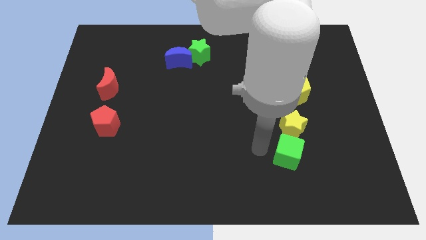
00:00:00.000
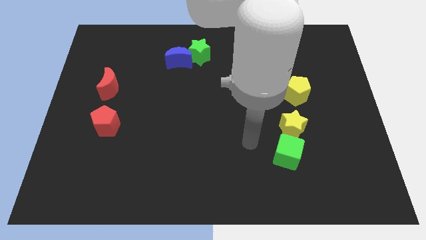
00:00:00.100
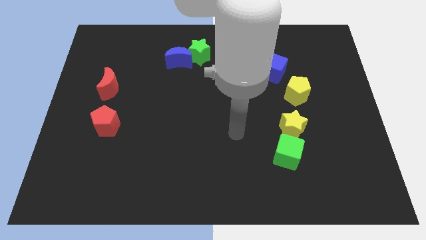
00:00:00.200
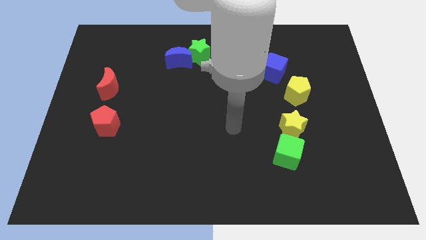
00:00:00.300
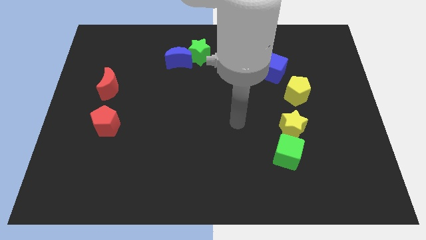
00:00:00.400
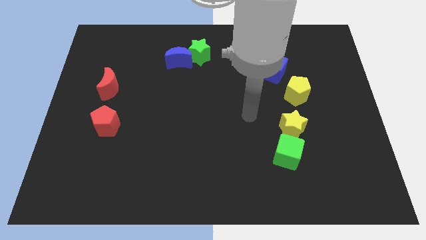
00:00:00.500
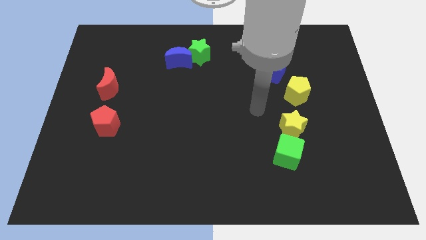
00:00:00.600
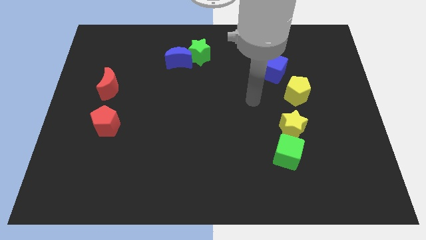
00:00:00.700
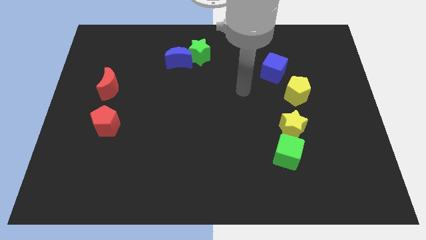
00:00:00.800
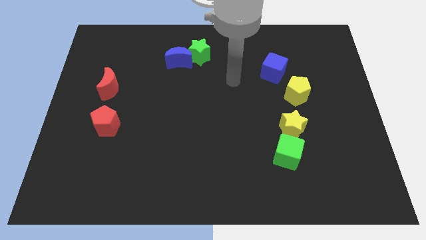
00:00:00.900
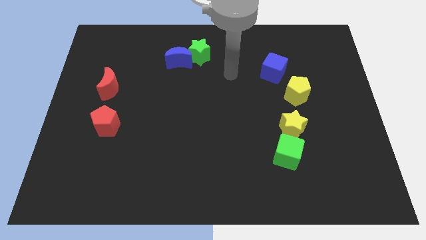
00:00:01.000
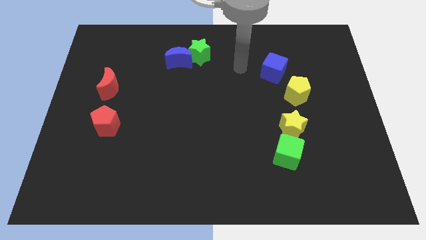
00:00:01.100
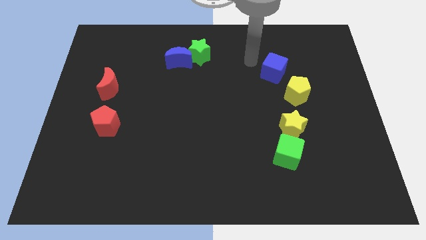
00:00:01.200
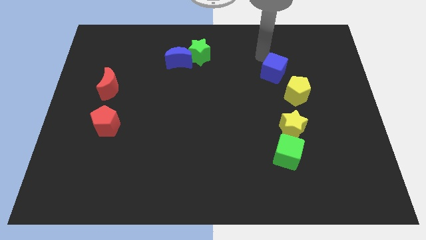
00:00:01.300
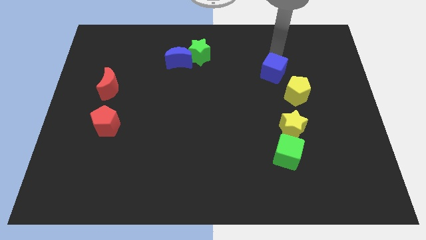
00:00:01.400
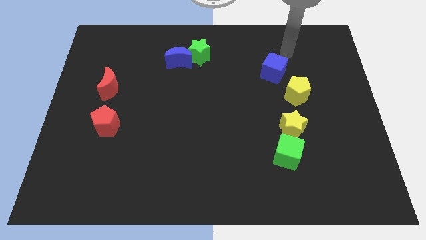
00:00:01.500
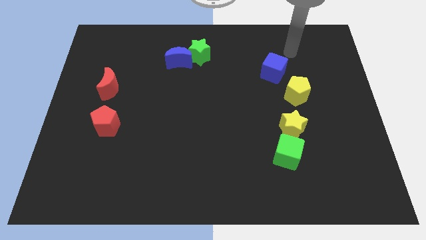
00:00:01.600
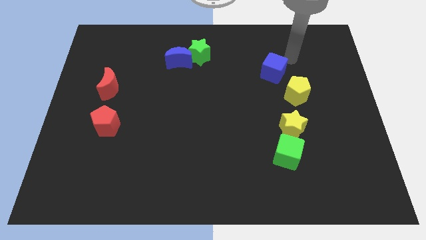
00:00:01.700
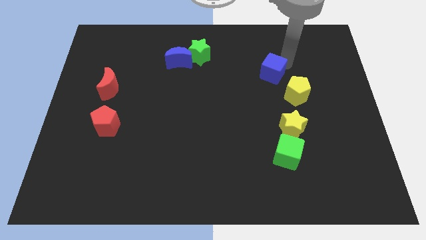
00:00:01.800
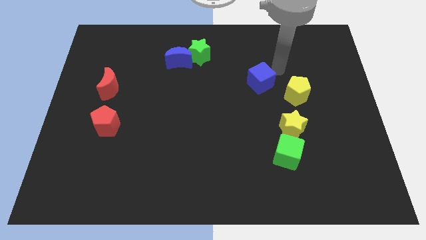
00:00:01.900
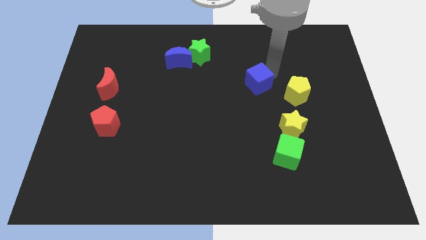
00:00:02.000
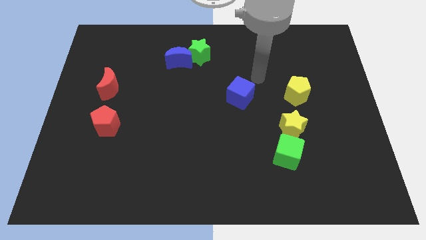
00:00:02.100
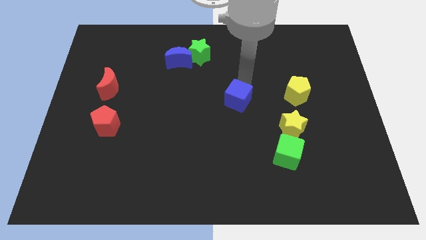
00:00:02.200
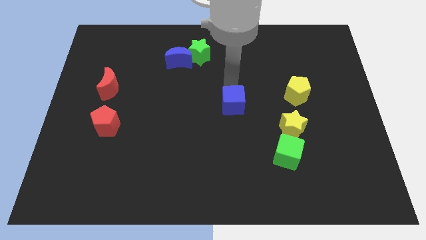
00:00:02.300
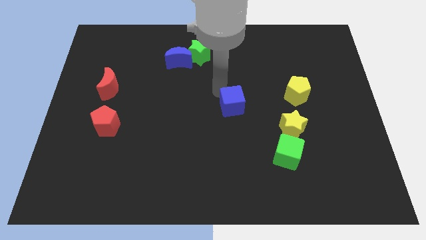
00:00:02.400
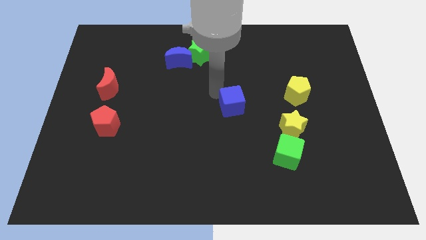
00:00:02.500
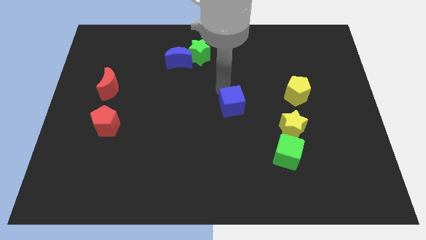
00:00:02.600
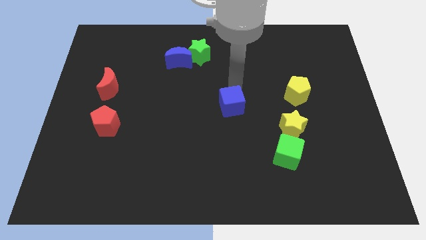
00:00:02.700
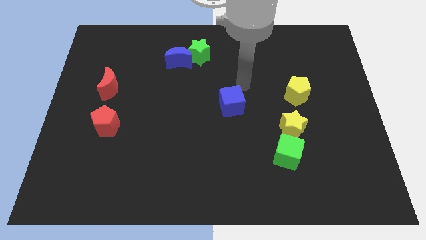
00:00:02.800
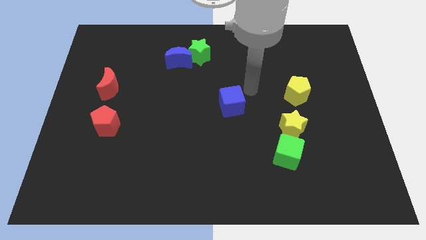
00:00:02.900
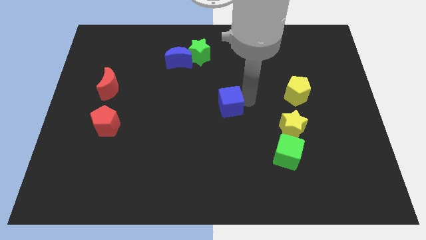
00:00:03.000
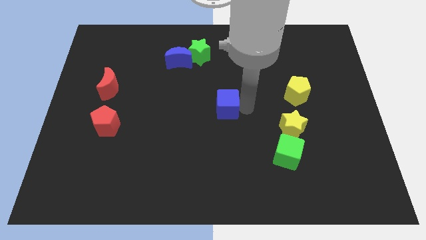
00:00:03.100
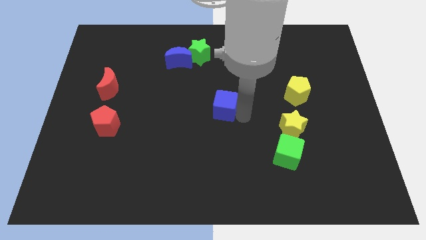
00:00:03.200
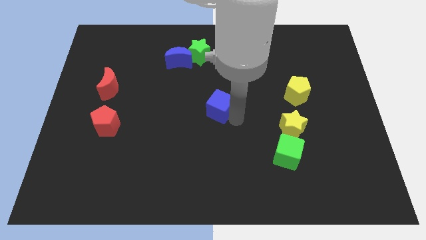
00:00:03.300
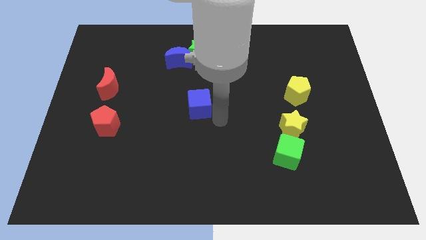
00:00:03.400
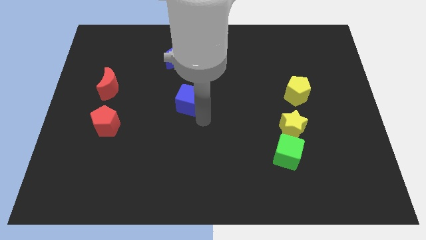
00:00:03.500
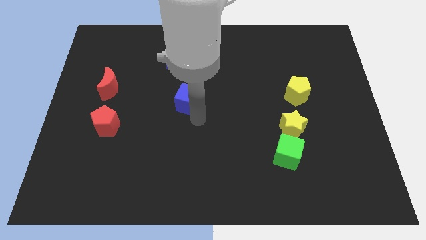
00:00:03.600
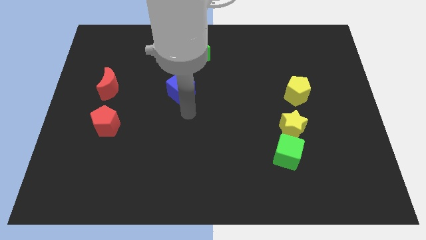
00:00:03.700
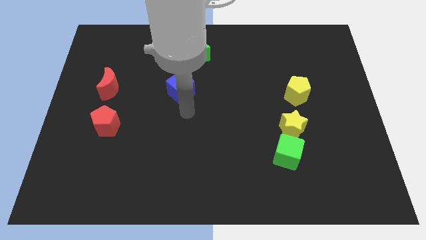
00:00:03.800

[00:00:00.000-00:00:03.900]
put the blue cube in between the red crescent and the yellow pentagon

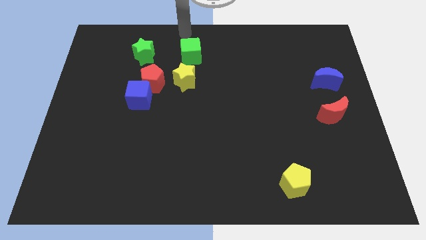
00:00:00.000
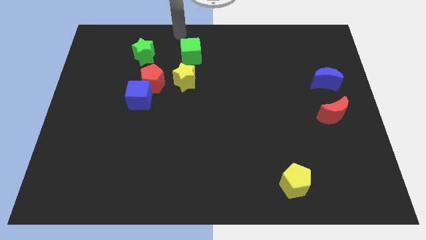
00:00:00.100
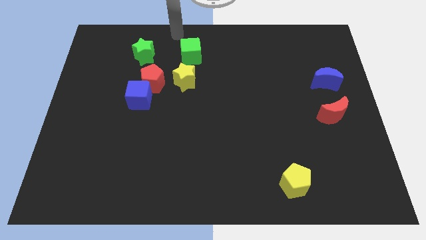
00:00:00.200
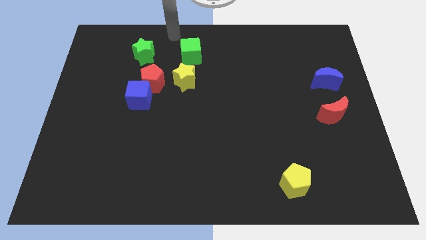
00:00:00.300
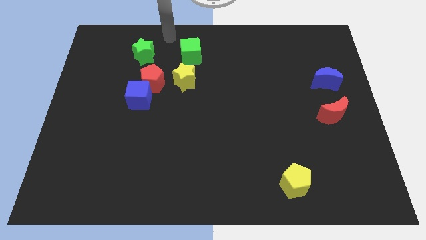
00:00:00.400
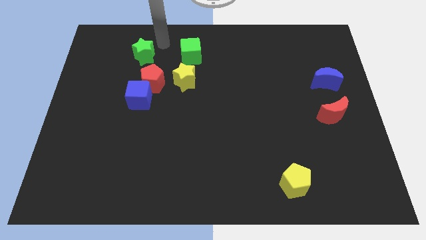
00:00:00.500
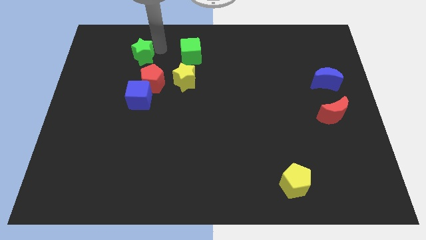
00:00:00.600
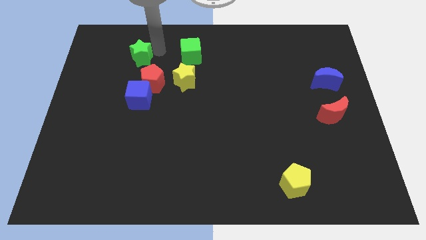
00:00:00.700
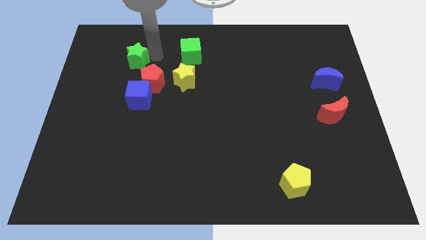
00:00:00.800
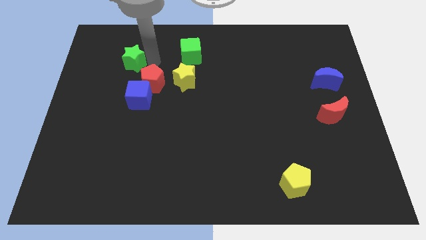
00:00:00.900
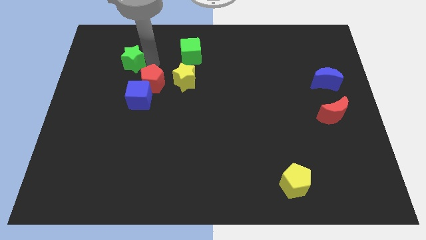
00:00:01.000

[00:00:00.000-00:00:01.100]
push the green star to the top left of the red pentagon

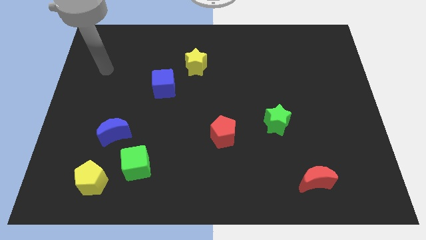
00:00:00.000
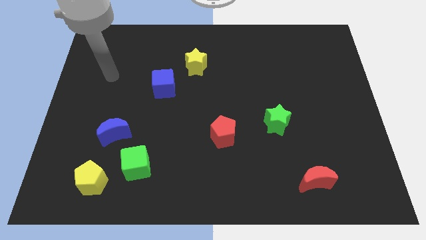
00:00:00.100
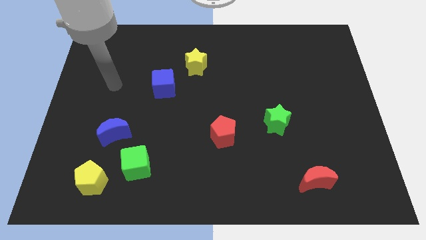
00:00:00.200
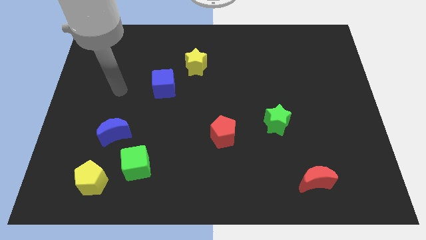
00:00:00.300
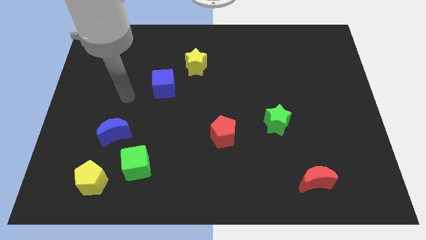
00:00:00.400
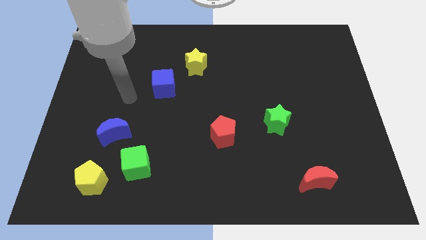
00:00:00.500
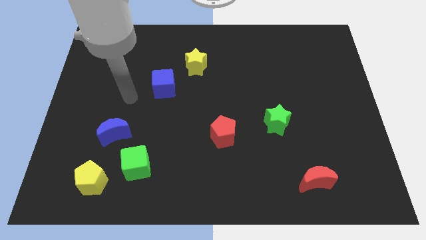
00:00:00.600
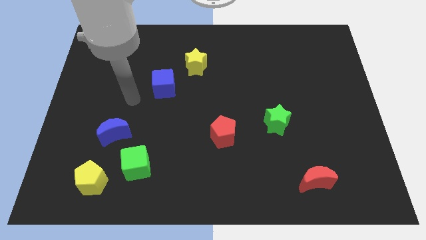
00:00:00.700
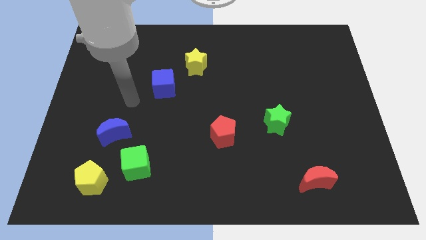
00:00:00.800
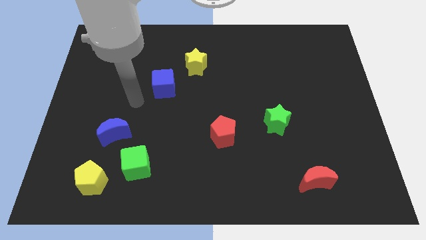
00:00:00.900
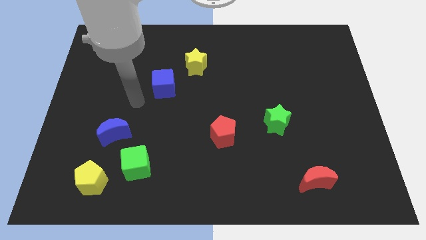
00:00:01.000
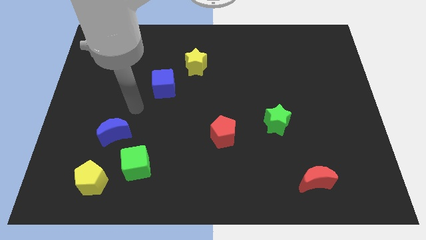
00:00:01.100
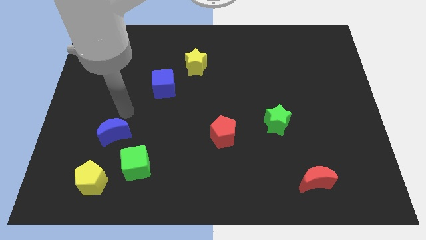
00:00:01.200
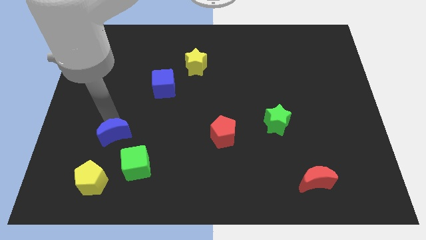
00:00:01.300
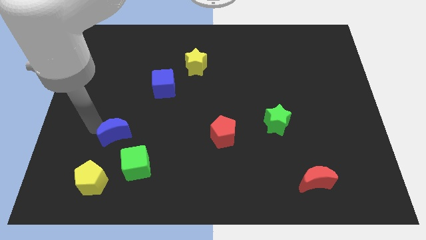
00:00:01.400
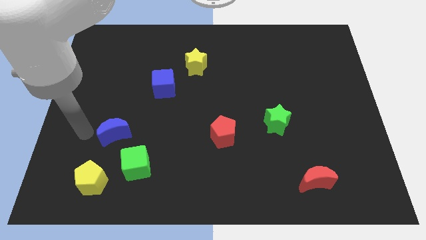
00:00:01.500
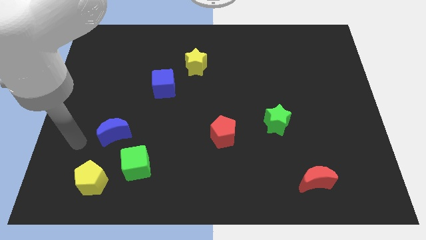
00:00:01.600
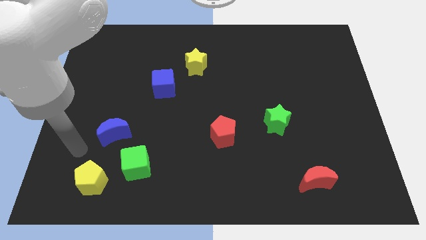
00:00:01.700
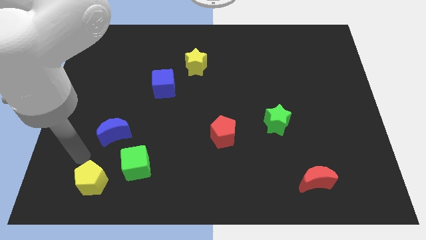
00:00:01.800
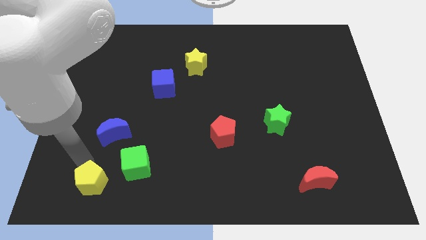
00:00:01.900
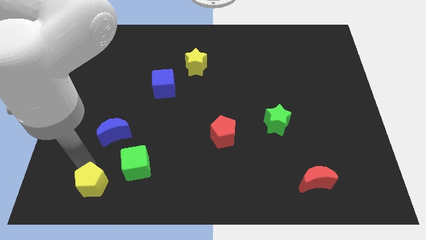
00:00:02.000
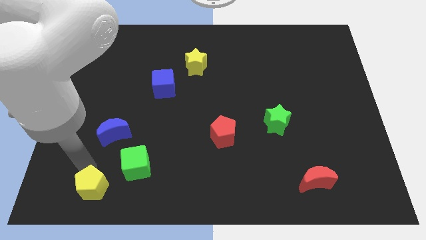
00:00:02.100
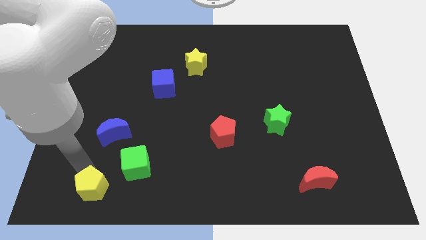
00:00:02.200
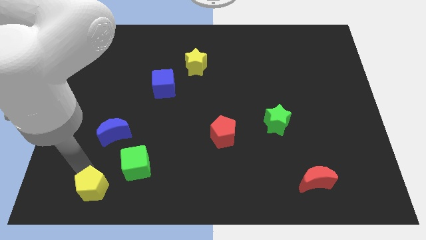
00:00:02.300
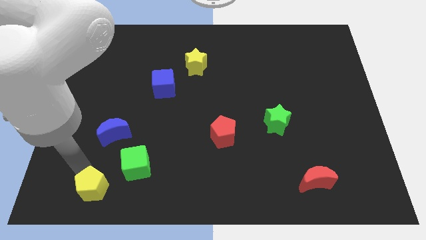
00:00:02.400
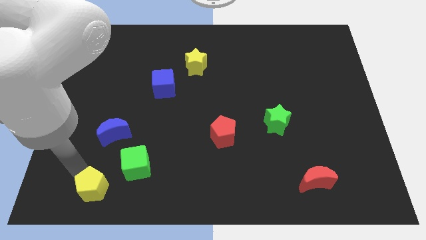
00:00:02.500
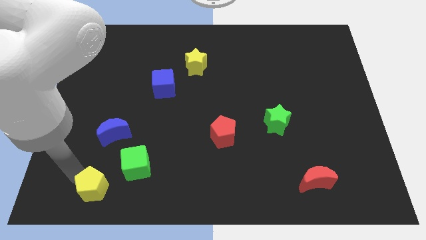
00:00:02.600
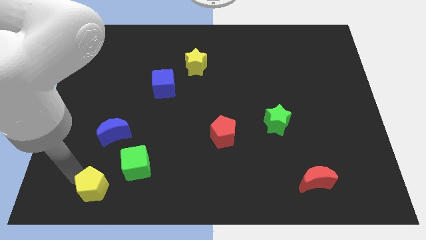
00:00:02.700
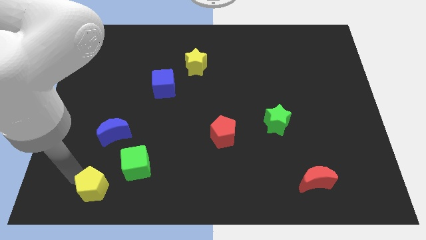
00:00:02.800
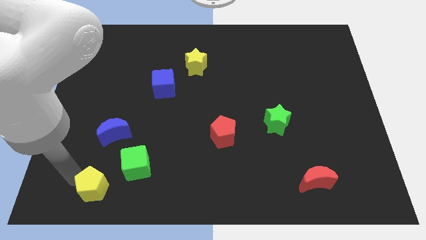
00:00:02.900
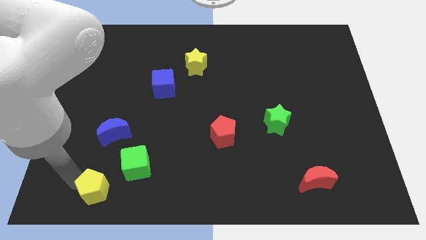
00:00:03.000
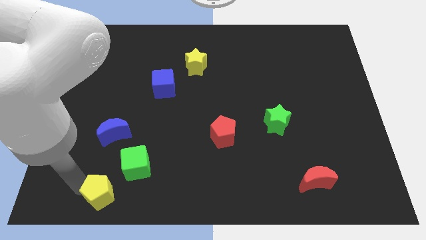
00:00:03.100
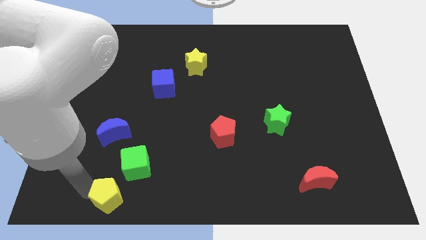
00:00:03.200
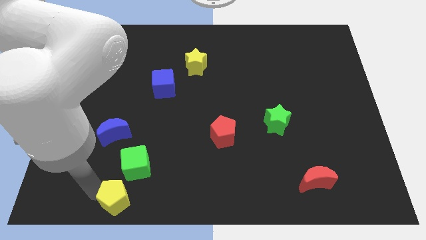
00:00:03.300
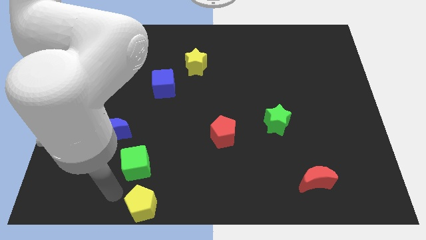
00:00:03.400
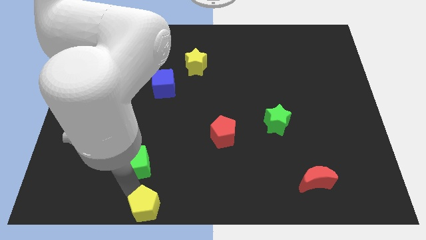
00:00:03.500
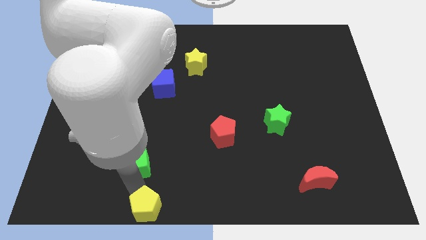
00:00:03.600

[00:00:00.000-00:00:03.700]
place yellow pentagon to the bottom of green cube

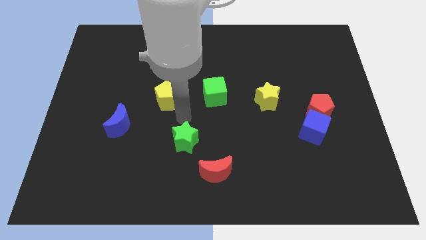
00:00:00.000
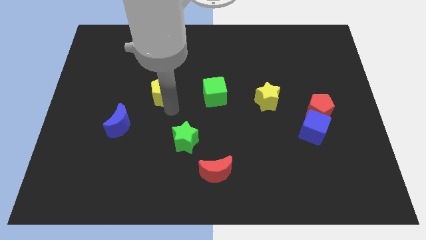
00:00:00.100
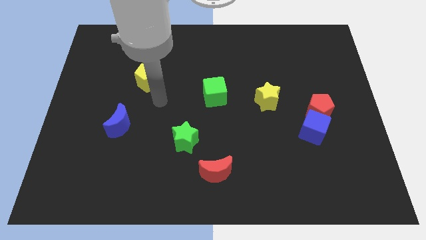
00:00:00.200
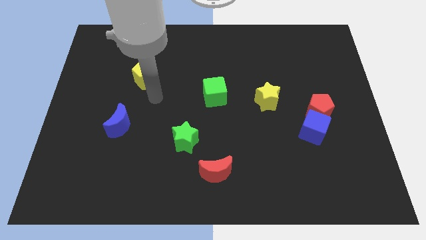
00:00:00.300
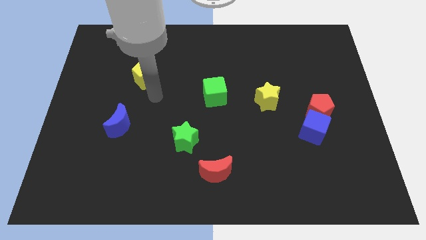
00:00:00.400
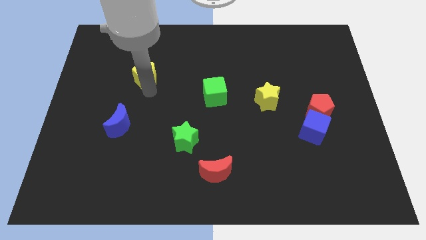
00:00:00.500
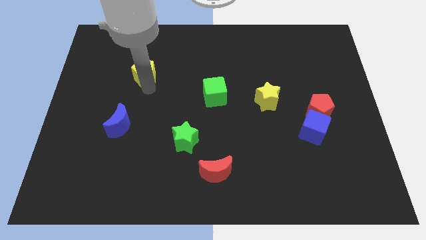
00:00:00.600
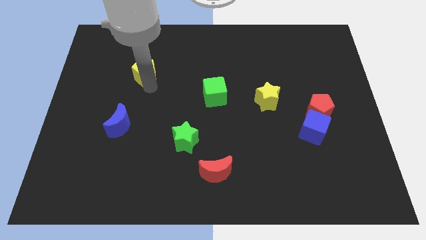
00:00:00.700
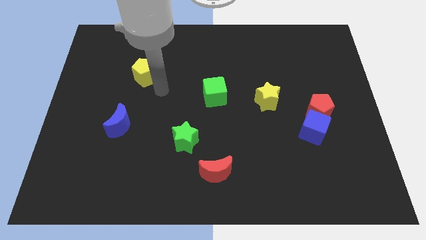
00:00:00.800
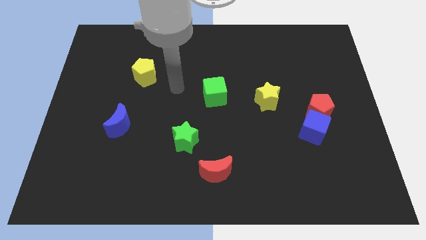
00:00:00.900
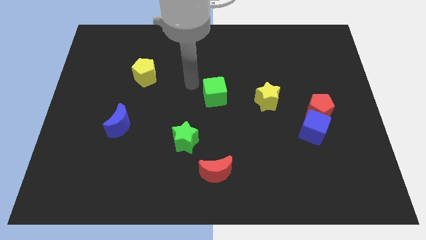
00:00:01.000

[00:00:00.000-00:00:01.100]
place the yellow pentagon diagonally to green cube
